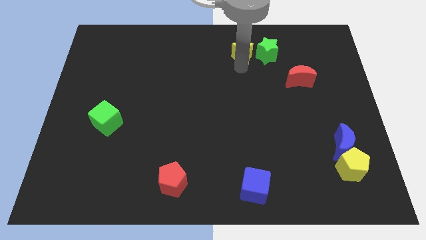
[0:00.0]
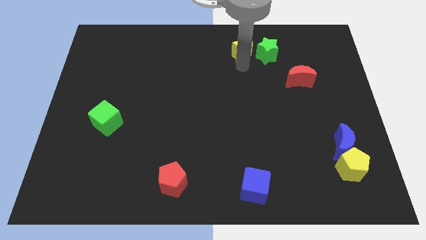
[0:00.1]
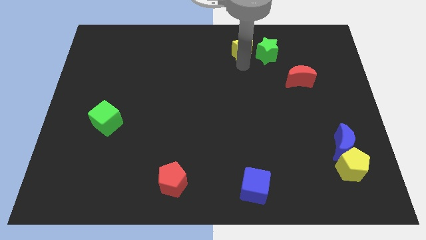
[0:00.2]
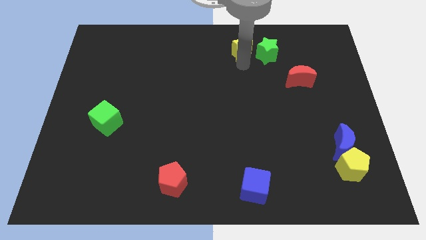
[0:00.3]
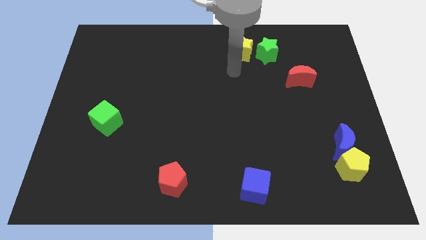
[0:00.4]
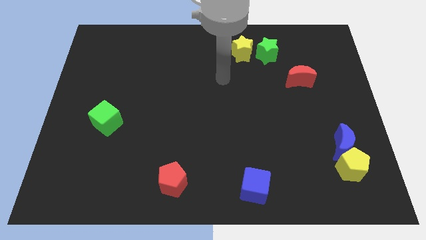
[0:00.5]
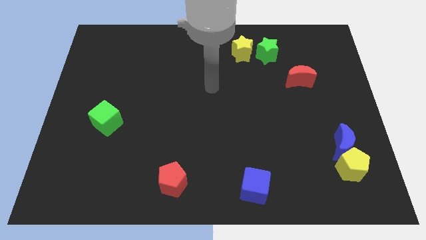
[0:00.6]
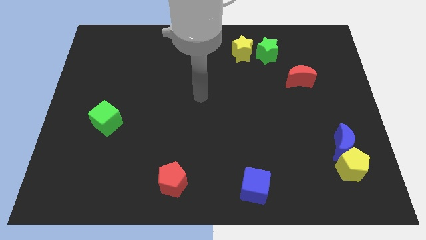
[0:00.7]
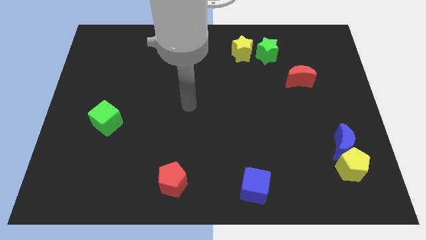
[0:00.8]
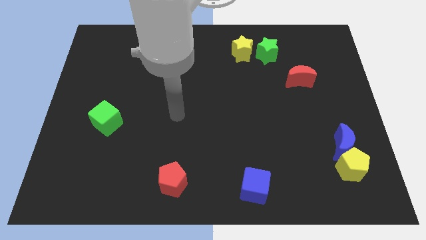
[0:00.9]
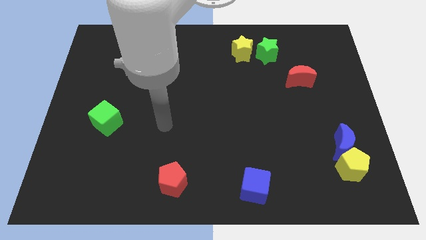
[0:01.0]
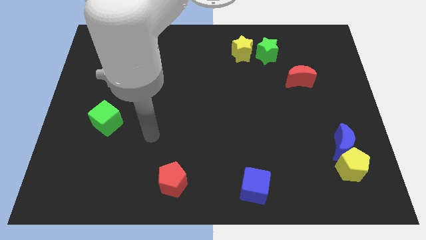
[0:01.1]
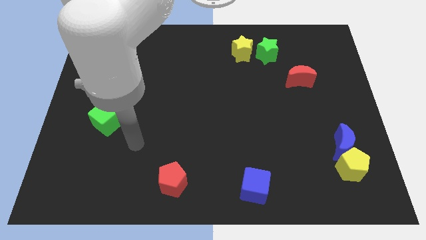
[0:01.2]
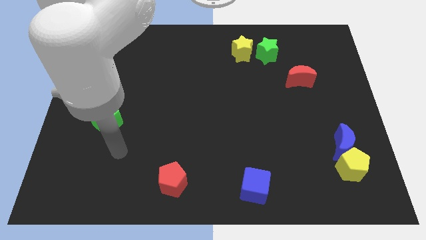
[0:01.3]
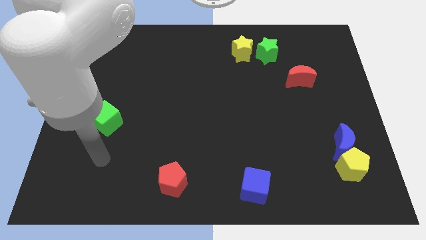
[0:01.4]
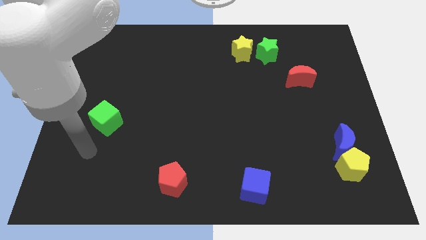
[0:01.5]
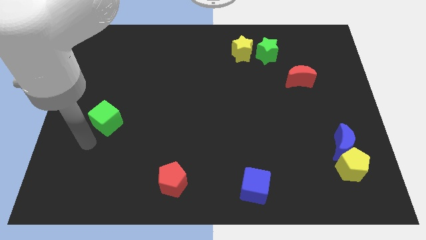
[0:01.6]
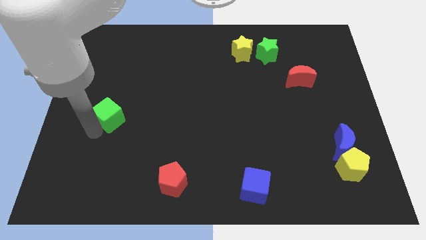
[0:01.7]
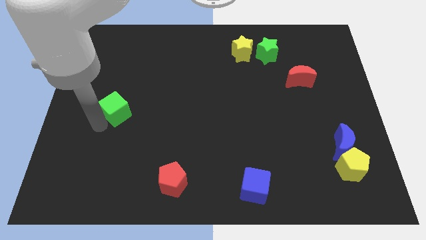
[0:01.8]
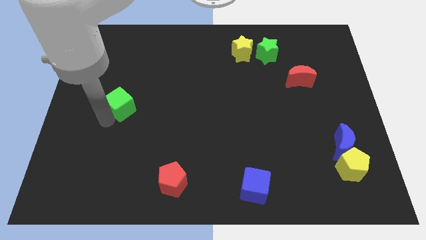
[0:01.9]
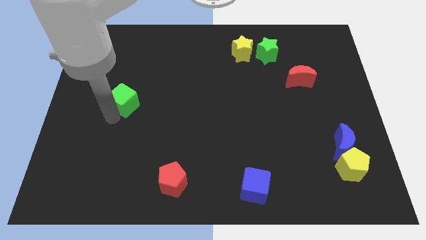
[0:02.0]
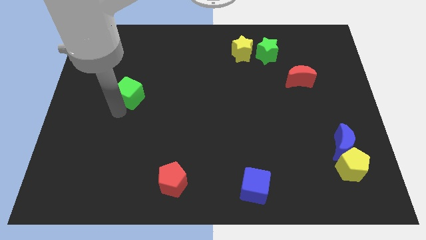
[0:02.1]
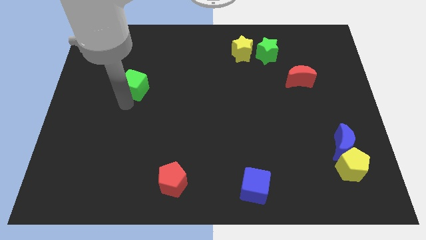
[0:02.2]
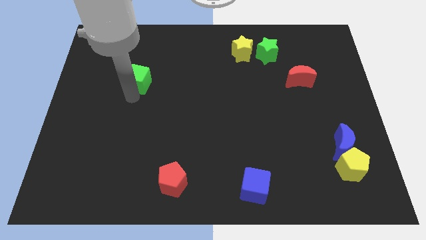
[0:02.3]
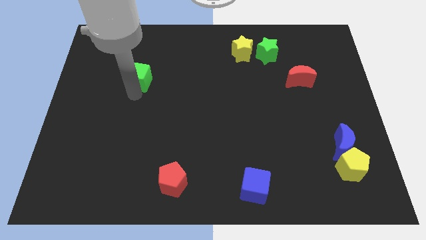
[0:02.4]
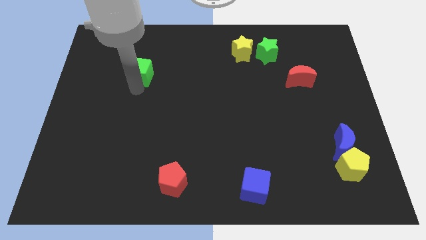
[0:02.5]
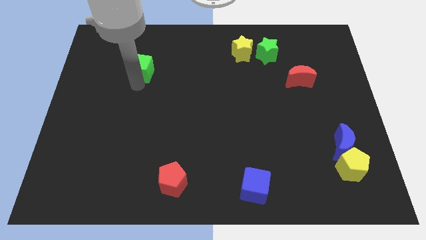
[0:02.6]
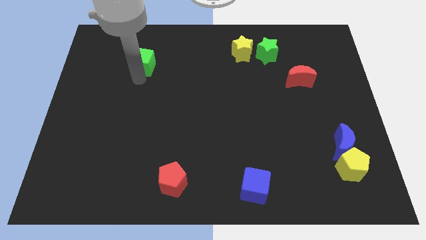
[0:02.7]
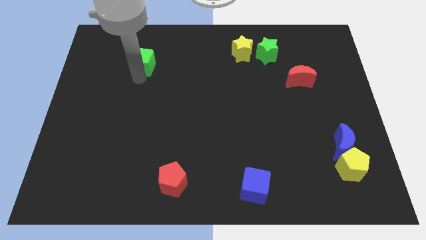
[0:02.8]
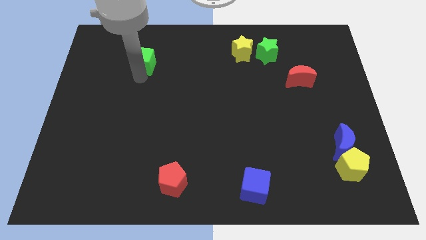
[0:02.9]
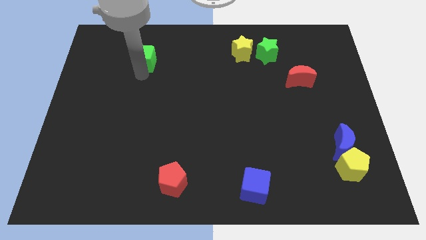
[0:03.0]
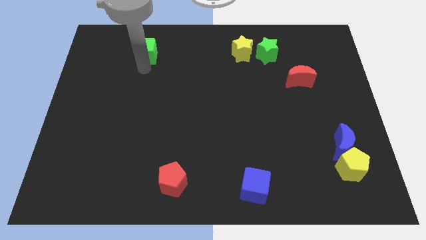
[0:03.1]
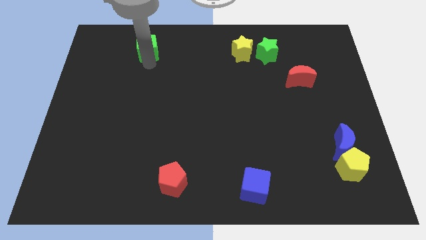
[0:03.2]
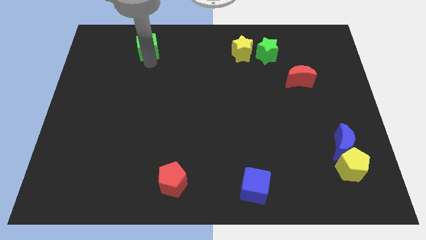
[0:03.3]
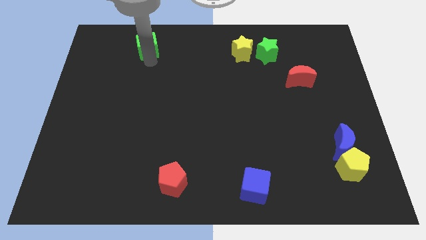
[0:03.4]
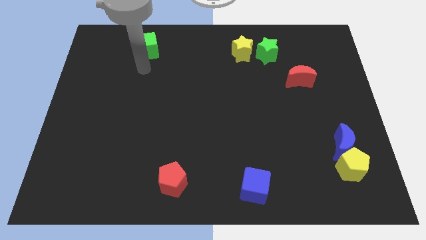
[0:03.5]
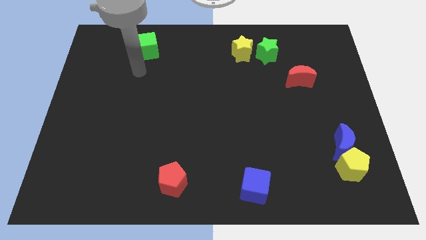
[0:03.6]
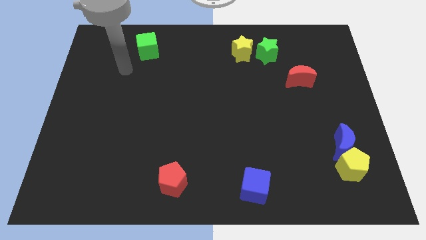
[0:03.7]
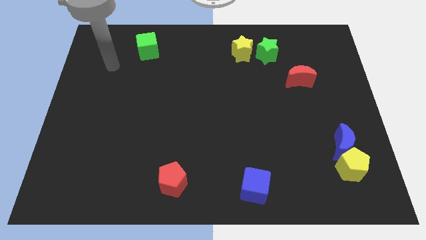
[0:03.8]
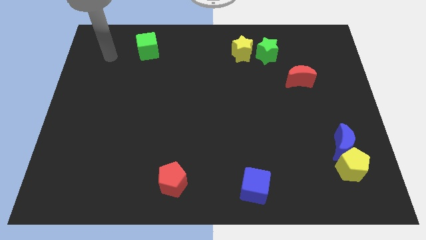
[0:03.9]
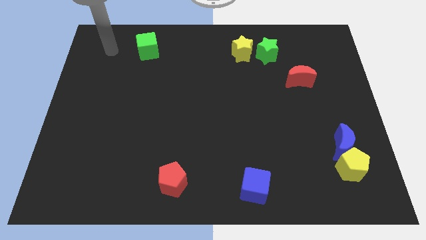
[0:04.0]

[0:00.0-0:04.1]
move green cube towards top

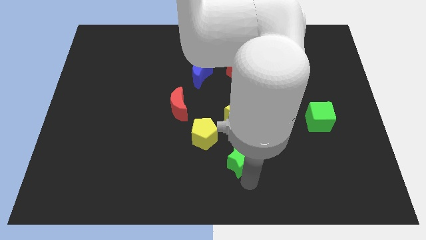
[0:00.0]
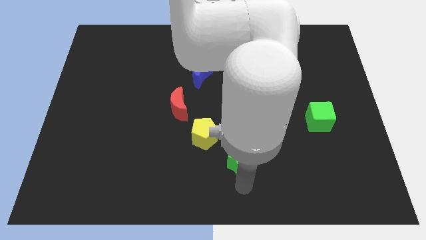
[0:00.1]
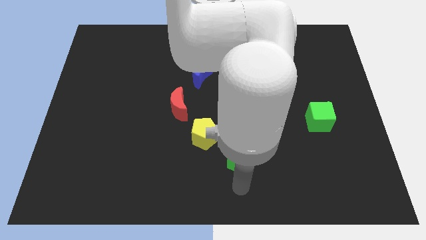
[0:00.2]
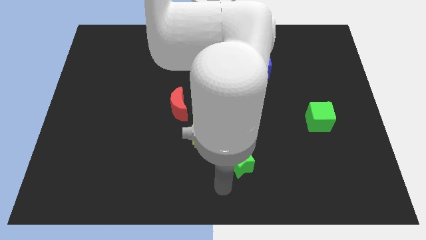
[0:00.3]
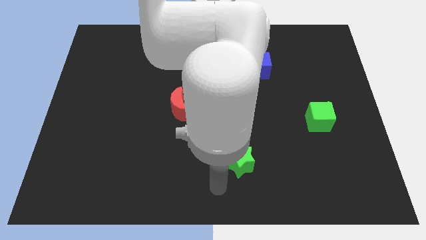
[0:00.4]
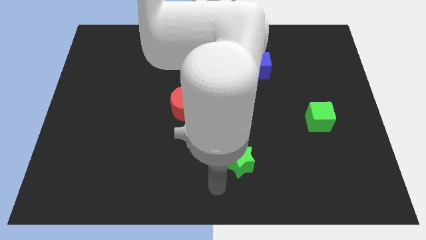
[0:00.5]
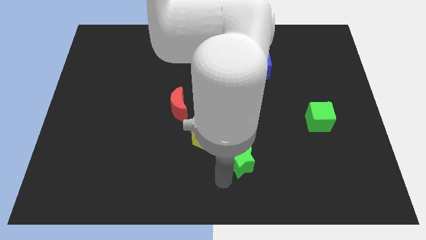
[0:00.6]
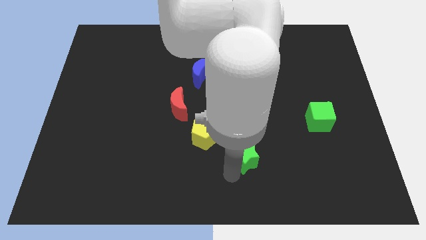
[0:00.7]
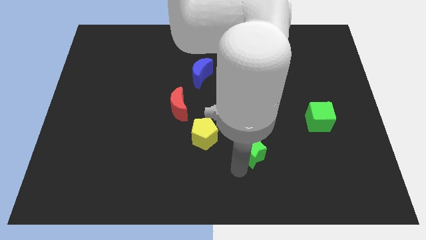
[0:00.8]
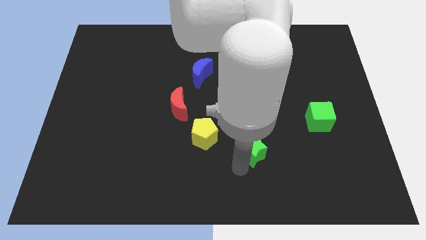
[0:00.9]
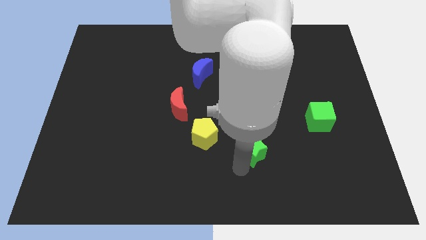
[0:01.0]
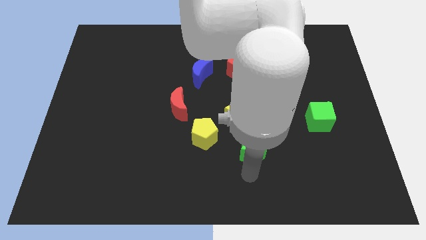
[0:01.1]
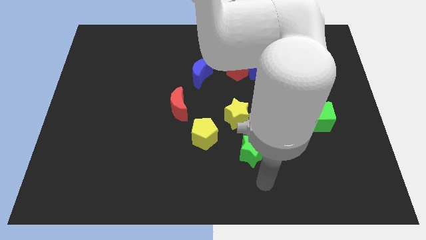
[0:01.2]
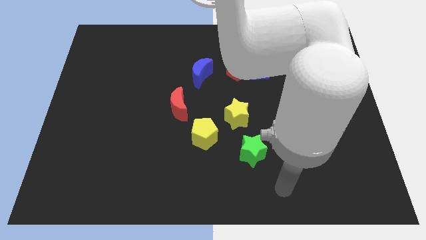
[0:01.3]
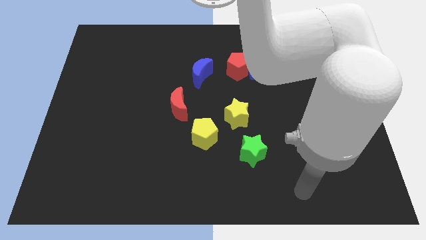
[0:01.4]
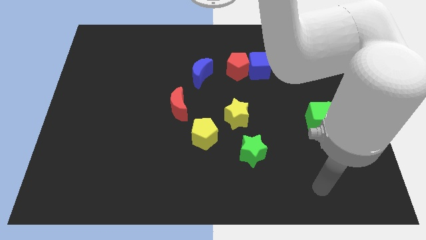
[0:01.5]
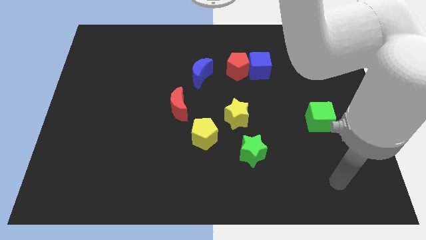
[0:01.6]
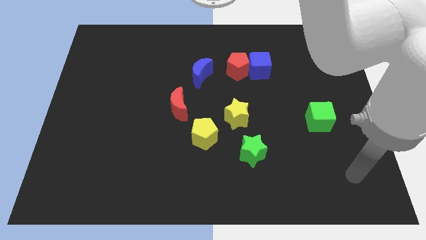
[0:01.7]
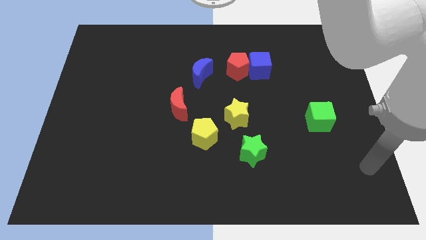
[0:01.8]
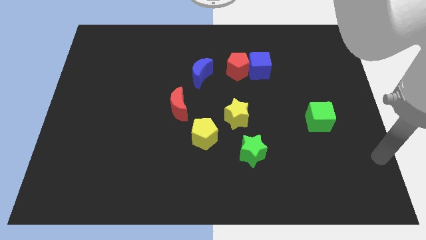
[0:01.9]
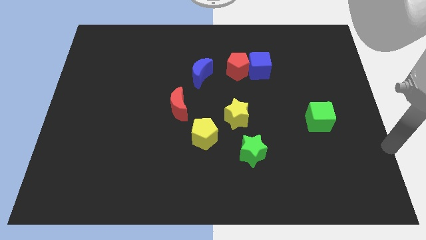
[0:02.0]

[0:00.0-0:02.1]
push green star slightly upwards

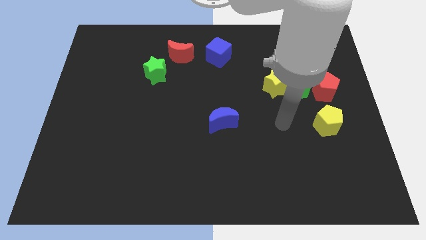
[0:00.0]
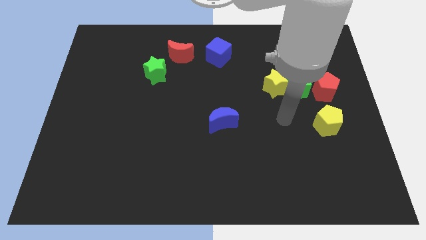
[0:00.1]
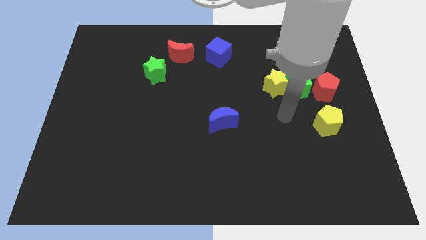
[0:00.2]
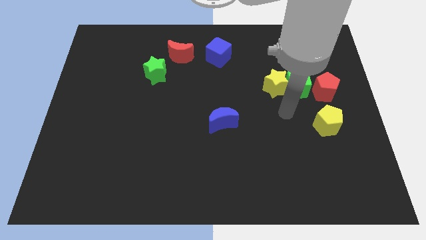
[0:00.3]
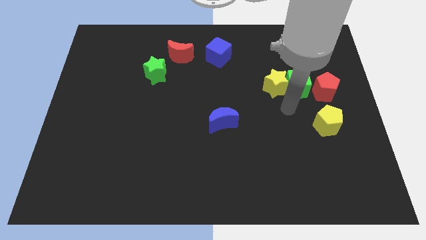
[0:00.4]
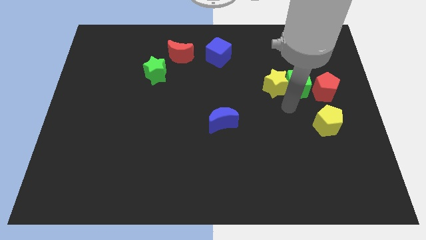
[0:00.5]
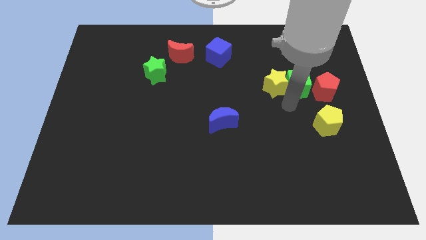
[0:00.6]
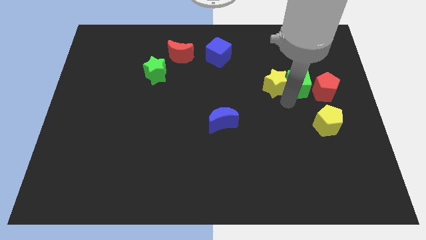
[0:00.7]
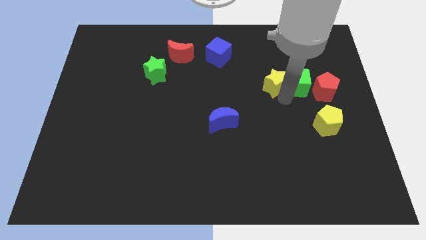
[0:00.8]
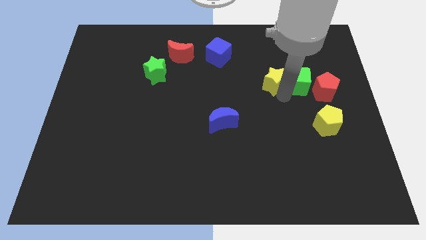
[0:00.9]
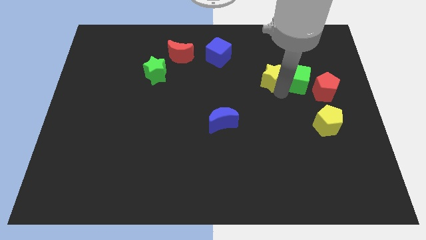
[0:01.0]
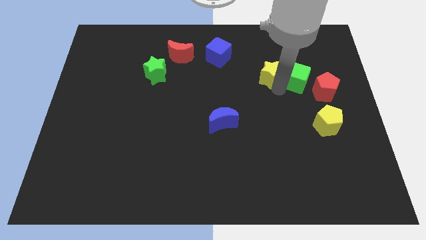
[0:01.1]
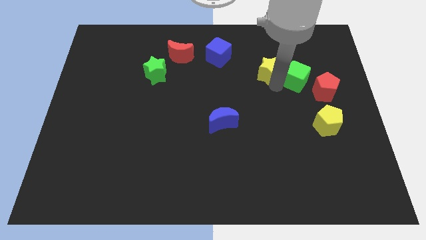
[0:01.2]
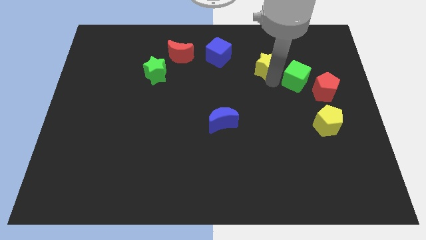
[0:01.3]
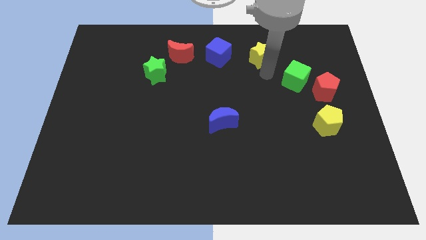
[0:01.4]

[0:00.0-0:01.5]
move the yellow star right to the blue cube

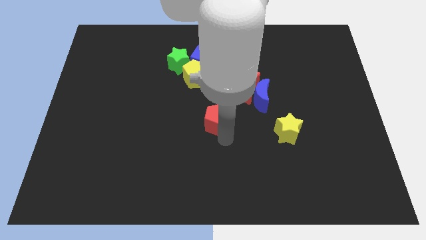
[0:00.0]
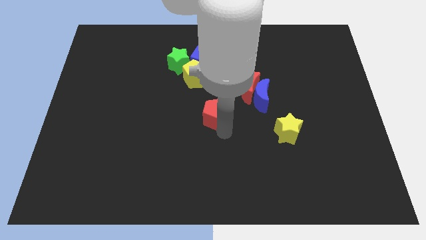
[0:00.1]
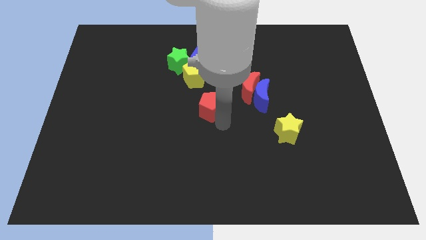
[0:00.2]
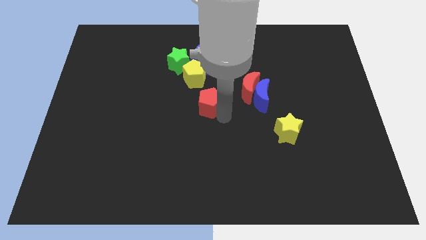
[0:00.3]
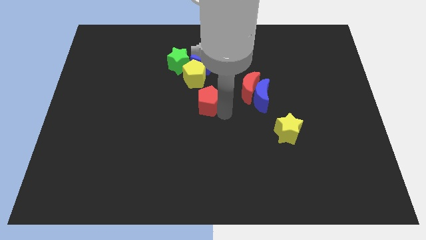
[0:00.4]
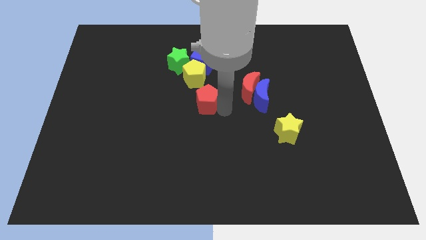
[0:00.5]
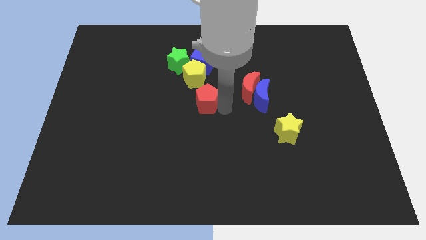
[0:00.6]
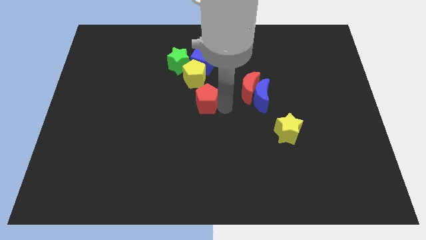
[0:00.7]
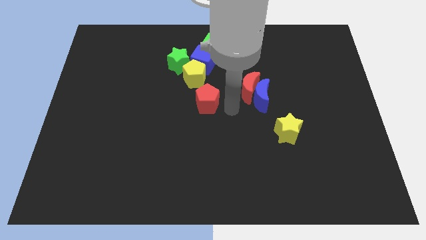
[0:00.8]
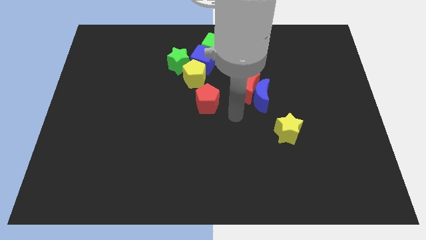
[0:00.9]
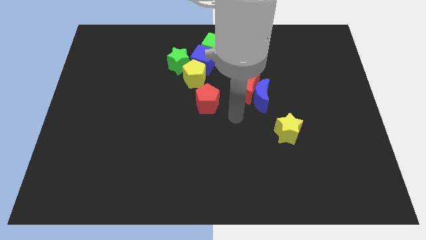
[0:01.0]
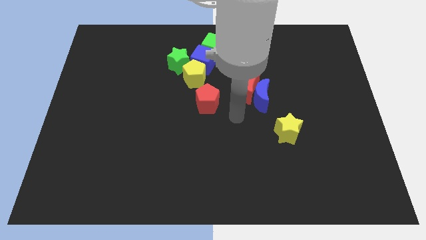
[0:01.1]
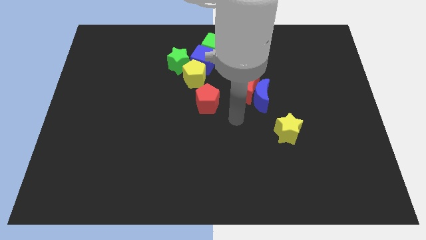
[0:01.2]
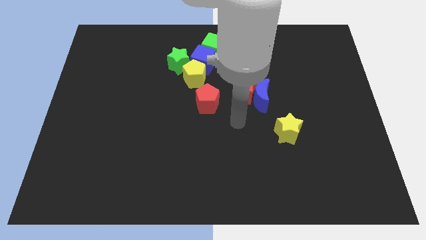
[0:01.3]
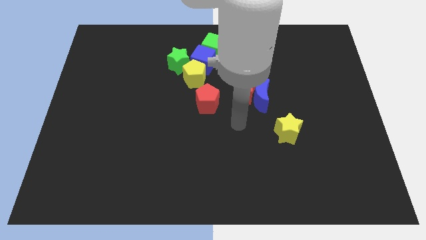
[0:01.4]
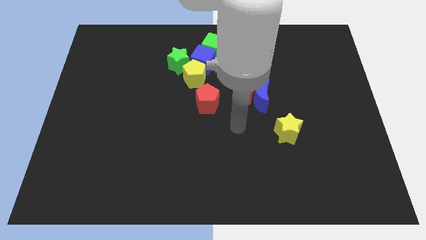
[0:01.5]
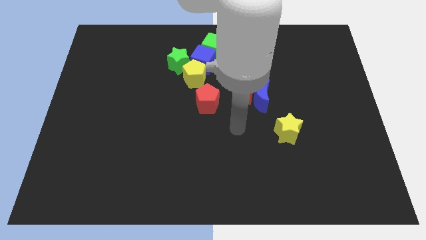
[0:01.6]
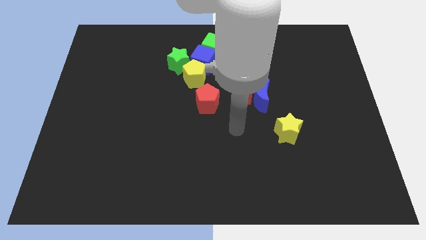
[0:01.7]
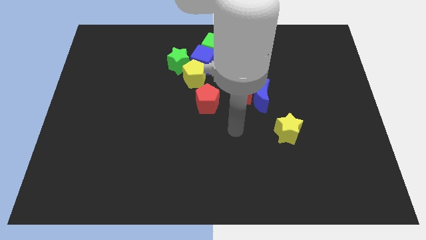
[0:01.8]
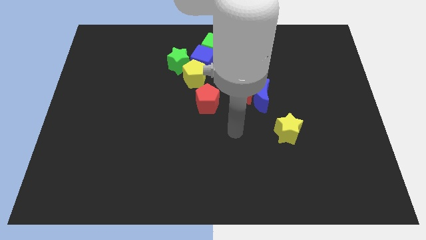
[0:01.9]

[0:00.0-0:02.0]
place red pentagon to the bottom right of yellow pentagon
